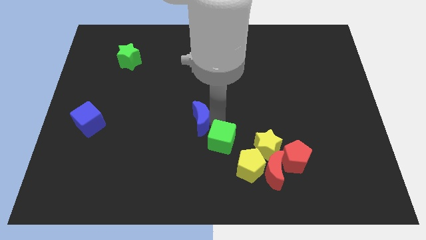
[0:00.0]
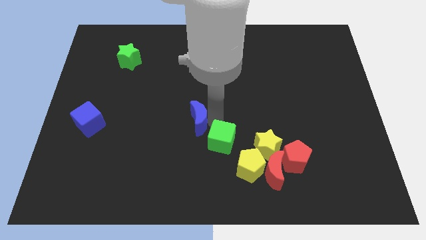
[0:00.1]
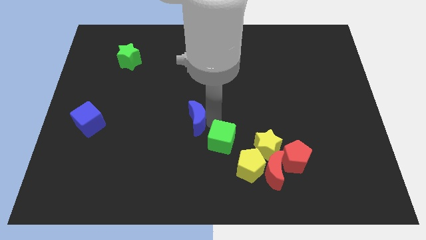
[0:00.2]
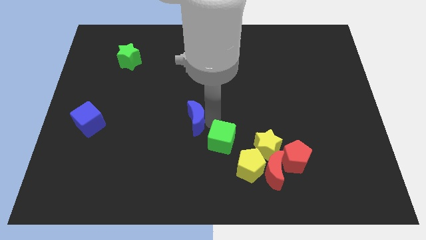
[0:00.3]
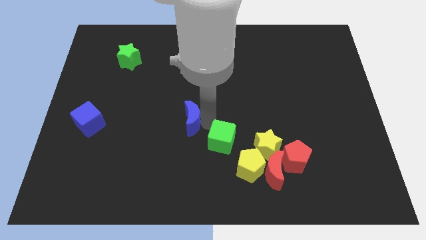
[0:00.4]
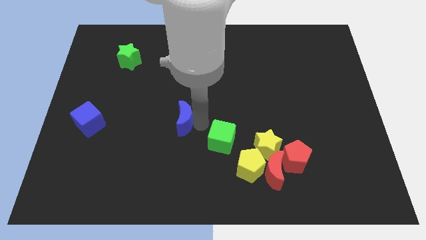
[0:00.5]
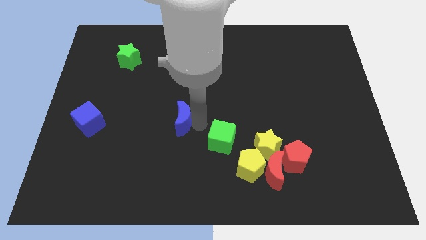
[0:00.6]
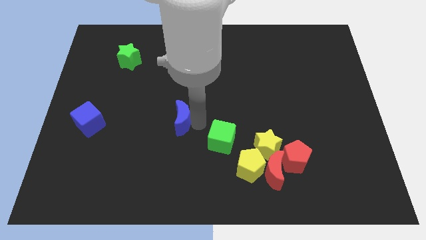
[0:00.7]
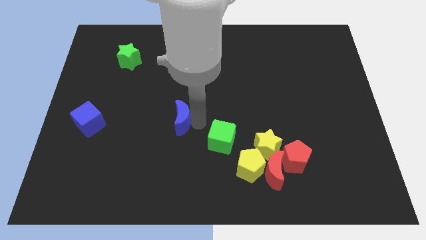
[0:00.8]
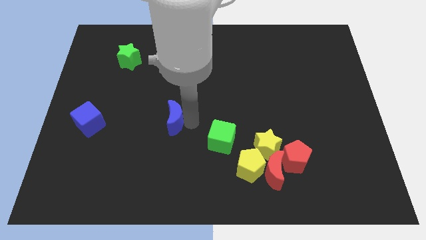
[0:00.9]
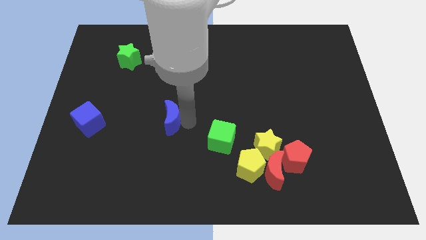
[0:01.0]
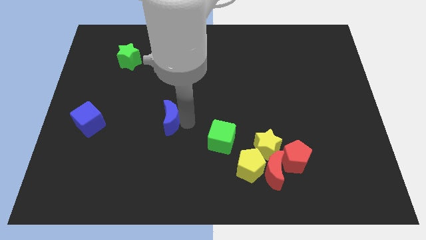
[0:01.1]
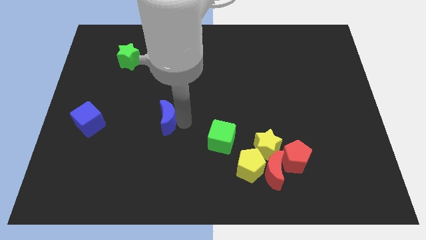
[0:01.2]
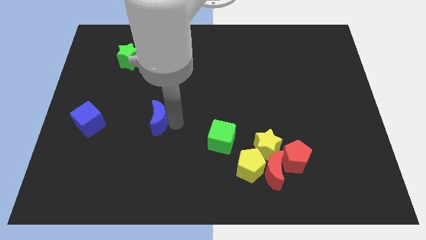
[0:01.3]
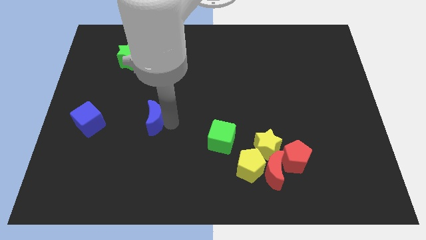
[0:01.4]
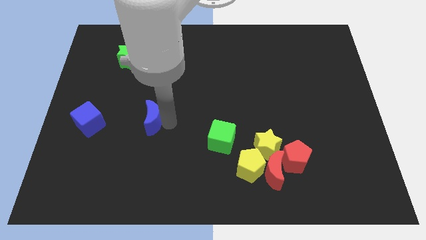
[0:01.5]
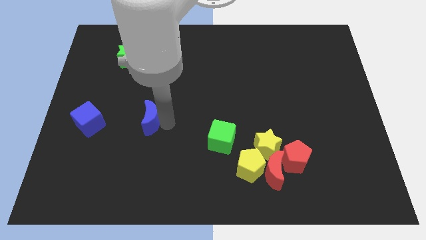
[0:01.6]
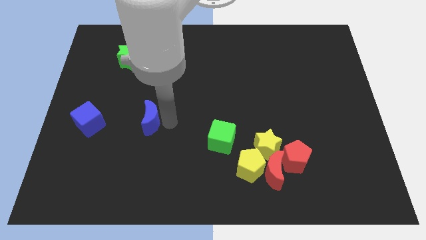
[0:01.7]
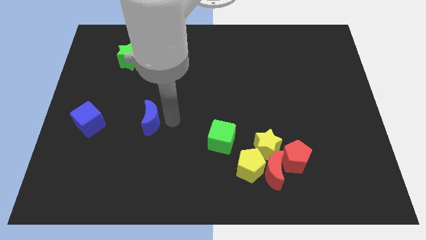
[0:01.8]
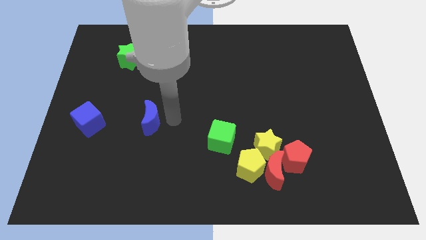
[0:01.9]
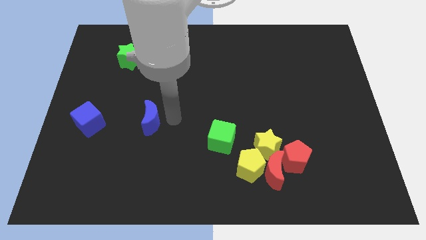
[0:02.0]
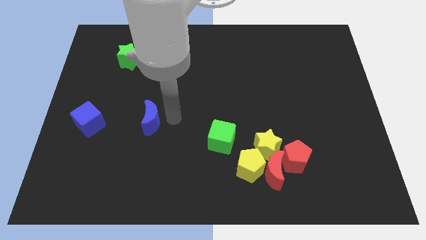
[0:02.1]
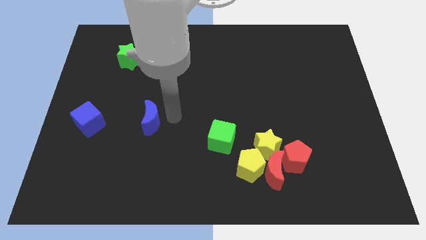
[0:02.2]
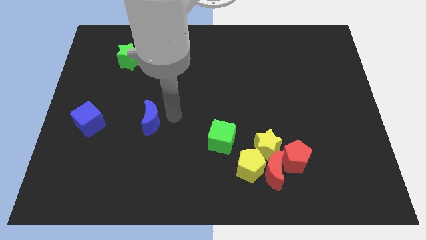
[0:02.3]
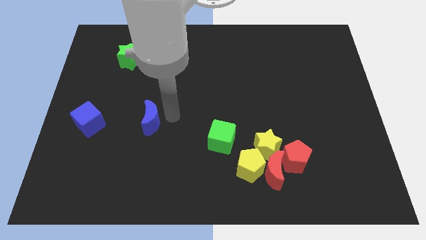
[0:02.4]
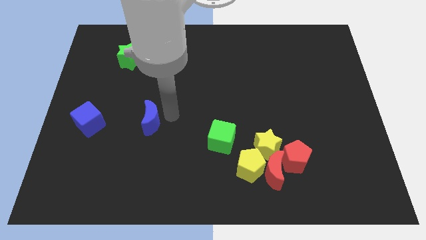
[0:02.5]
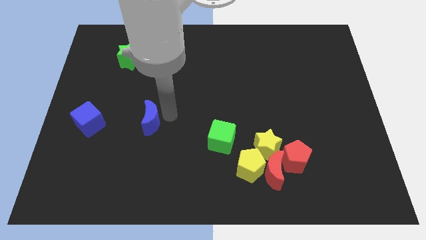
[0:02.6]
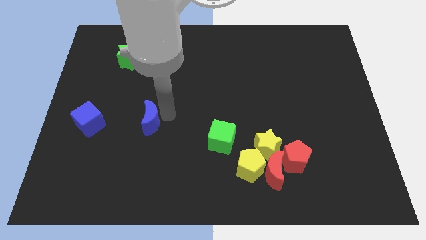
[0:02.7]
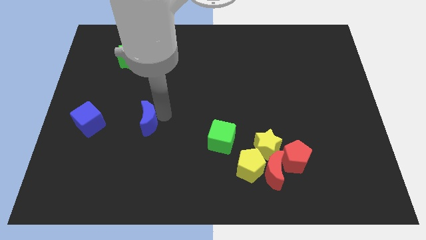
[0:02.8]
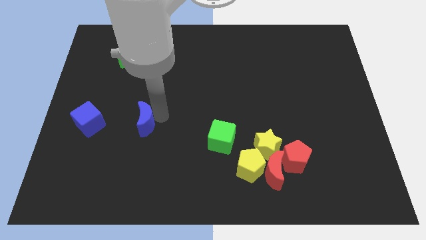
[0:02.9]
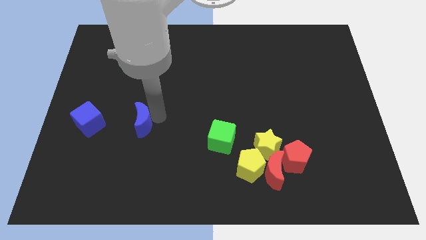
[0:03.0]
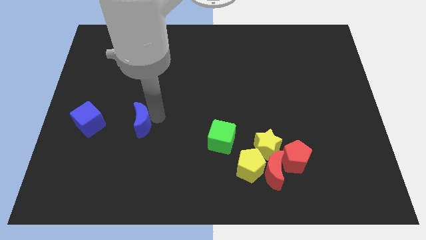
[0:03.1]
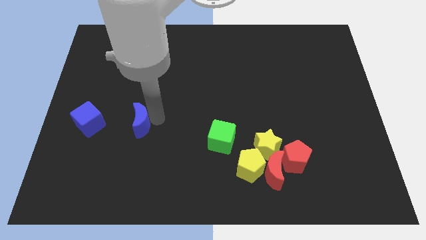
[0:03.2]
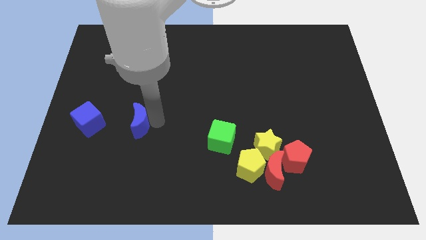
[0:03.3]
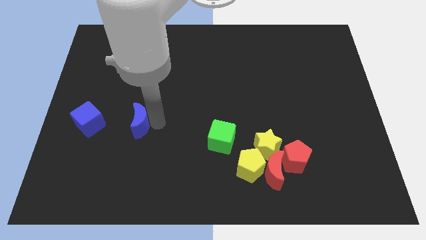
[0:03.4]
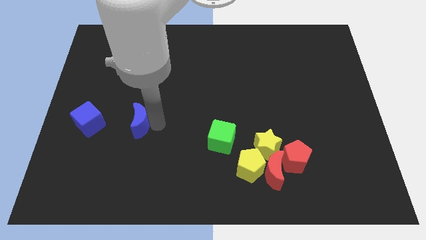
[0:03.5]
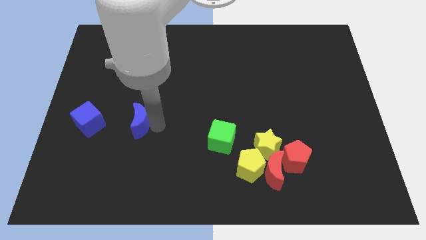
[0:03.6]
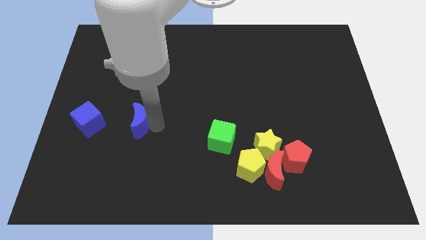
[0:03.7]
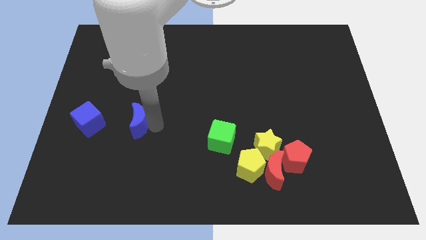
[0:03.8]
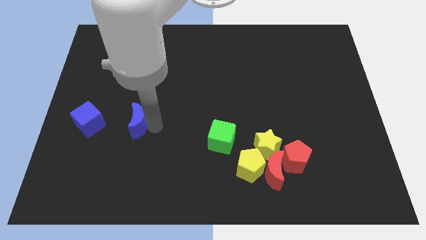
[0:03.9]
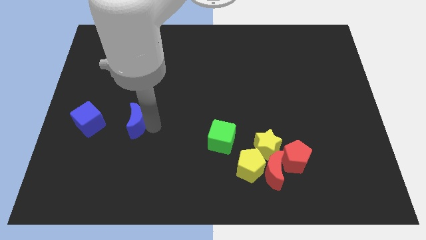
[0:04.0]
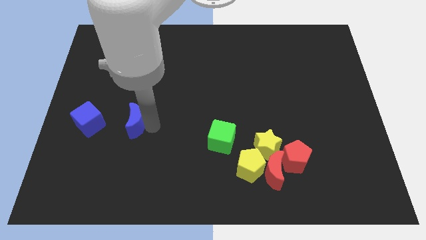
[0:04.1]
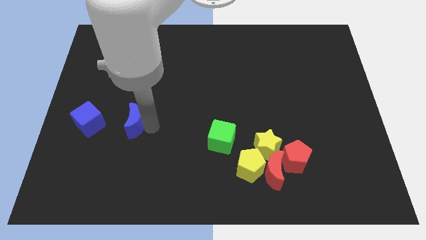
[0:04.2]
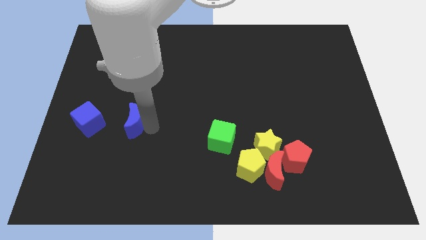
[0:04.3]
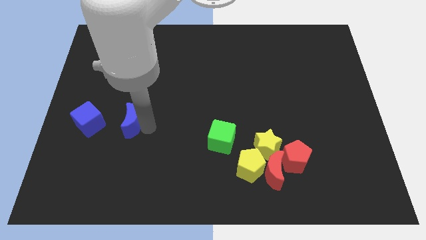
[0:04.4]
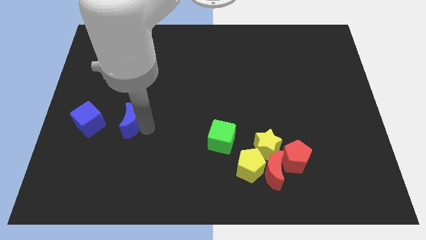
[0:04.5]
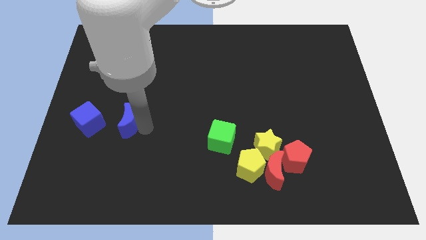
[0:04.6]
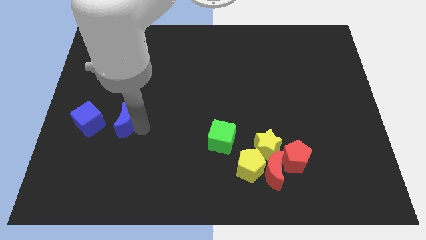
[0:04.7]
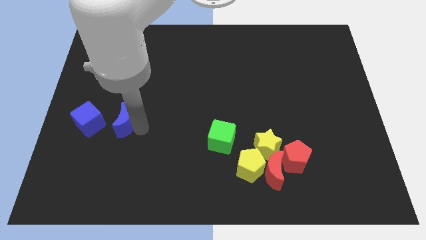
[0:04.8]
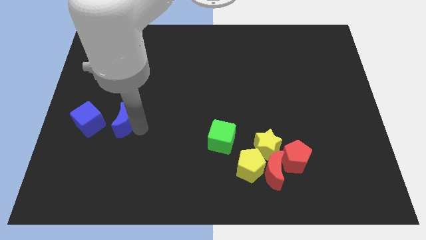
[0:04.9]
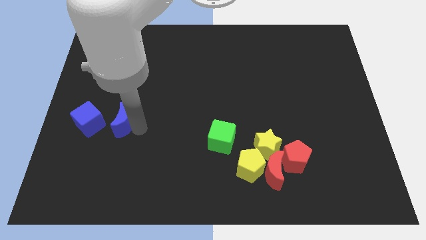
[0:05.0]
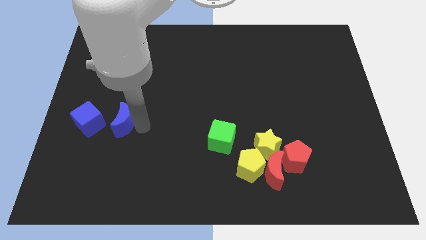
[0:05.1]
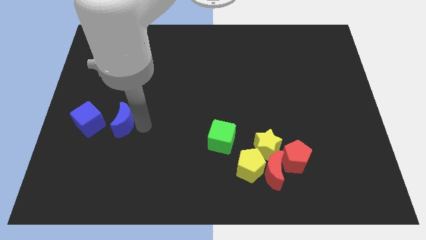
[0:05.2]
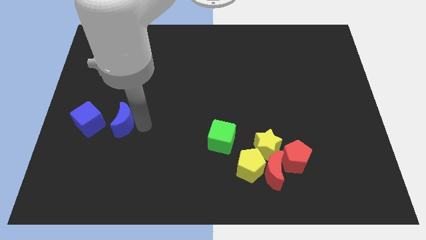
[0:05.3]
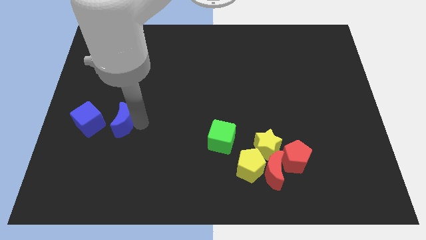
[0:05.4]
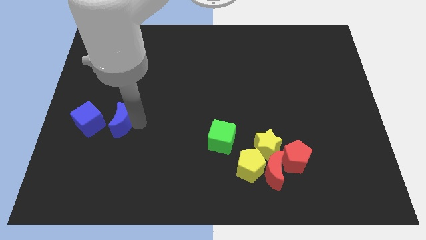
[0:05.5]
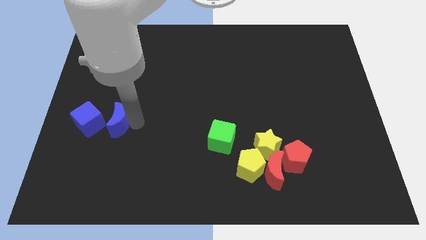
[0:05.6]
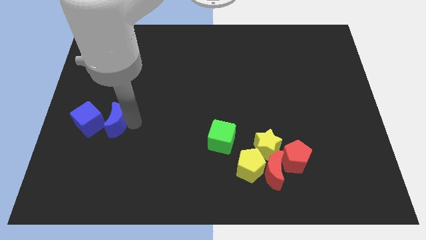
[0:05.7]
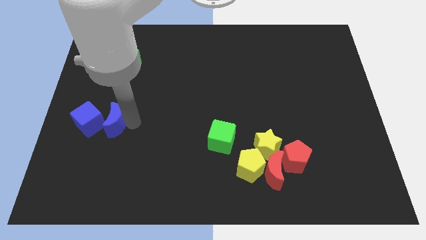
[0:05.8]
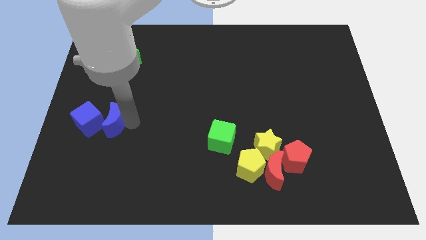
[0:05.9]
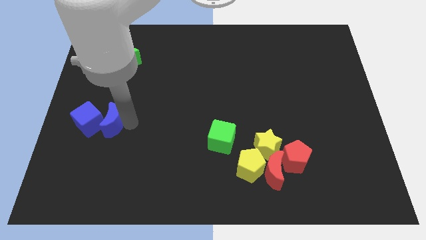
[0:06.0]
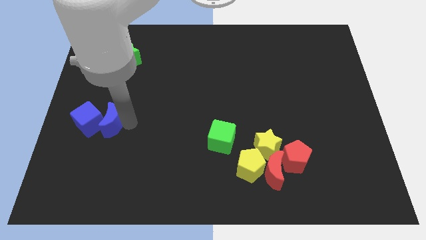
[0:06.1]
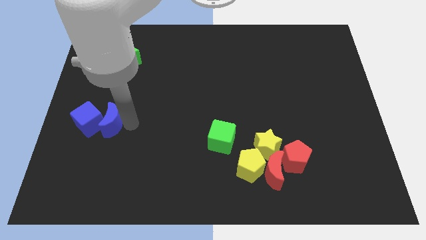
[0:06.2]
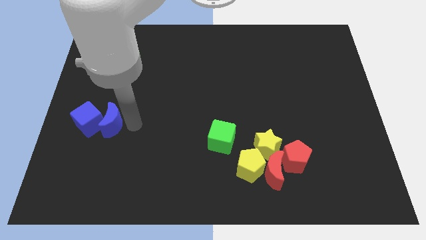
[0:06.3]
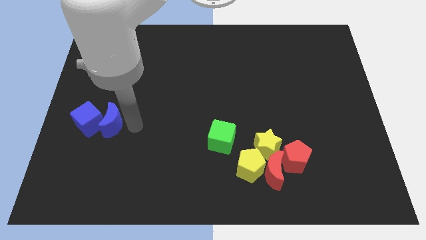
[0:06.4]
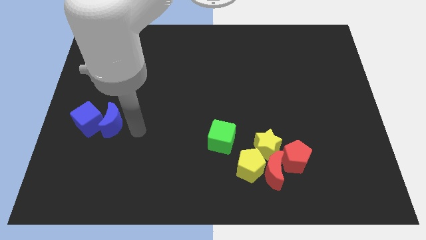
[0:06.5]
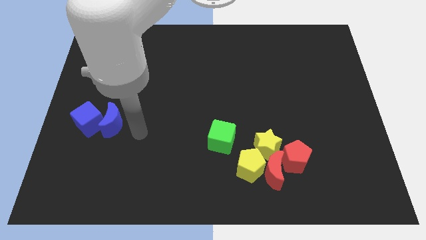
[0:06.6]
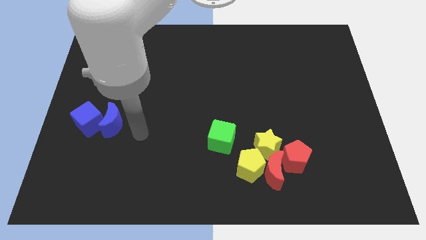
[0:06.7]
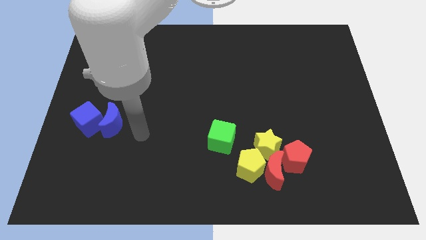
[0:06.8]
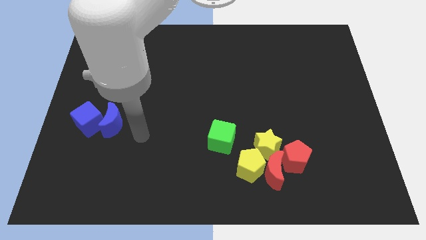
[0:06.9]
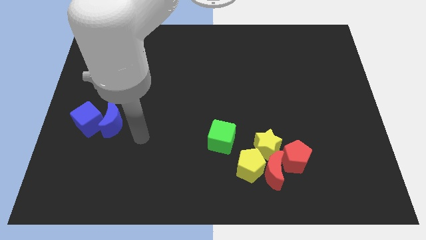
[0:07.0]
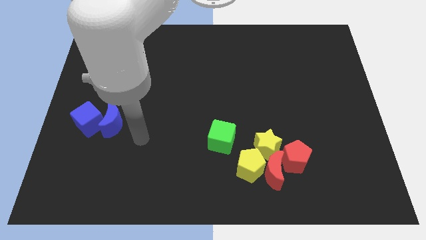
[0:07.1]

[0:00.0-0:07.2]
place the blue crescent to the right of the blue cube

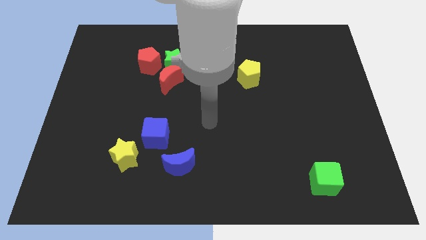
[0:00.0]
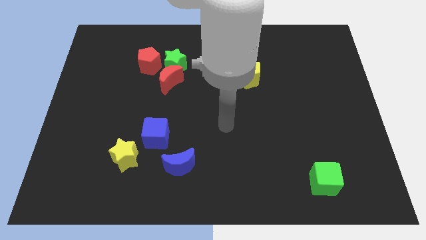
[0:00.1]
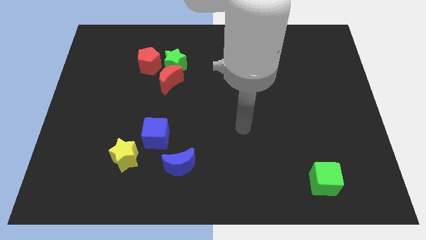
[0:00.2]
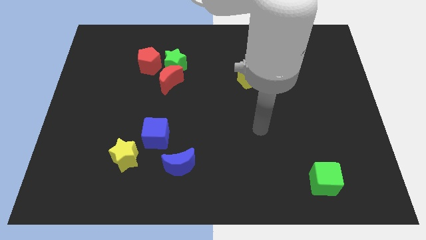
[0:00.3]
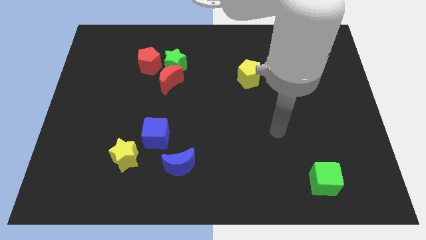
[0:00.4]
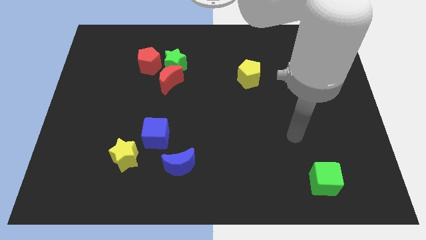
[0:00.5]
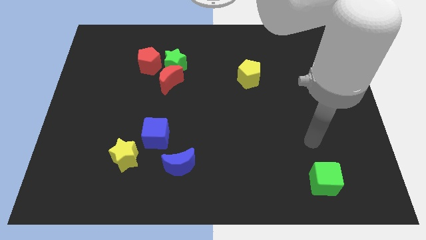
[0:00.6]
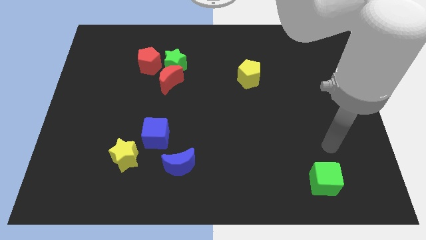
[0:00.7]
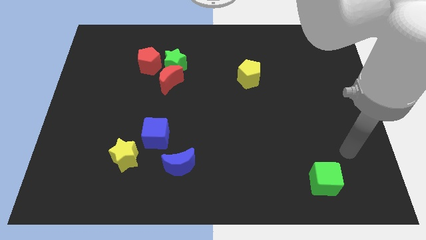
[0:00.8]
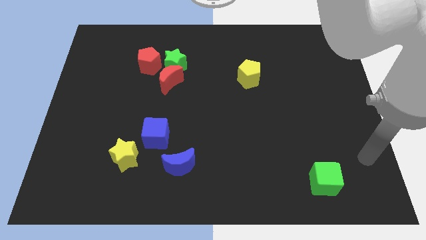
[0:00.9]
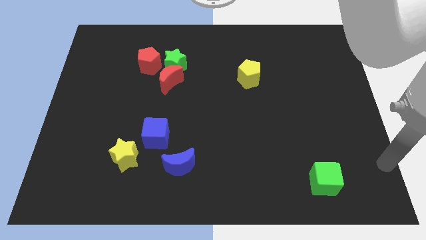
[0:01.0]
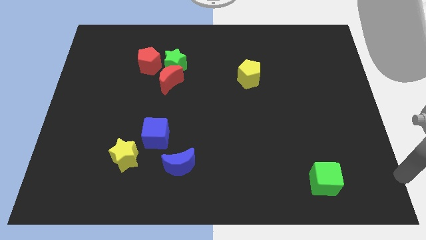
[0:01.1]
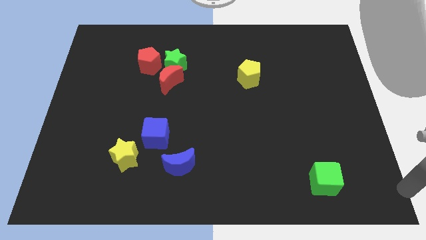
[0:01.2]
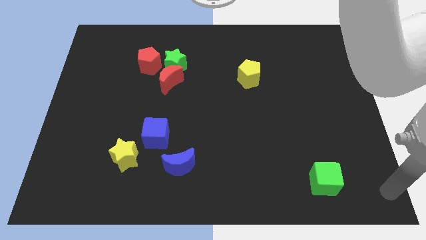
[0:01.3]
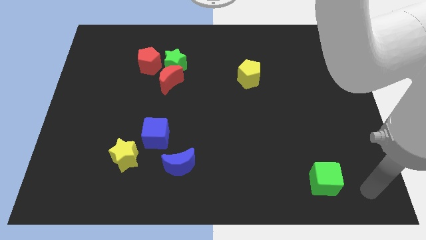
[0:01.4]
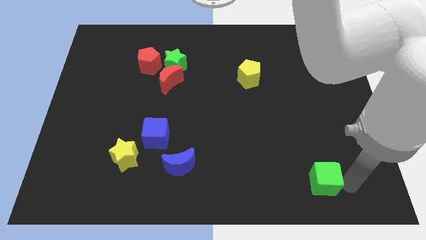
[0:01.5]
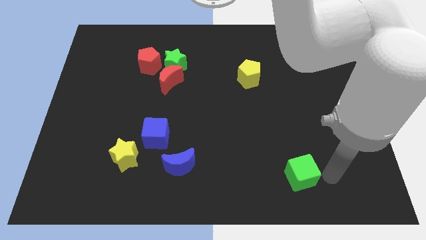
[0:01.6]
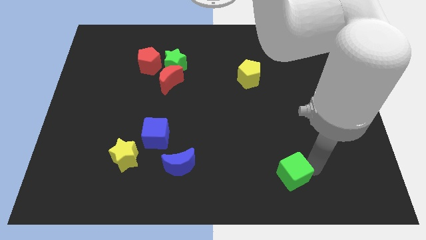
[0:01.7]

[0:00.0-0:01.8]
move the arm at the right of the green cube
